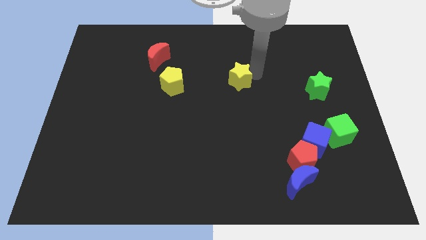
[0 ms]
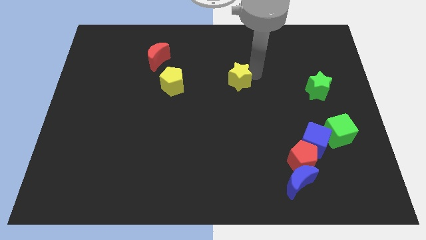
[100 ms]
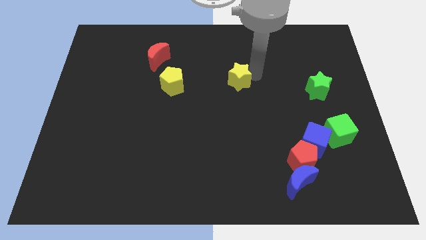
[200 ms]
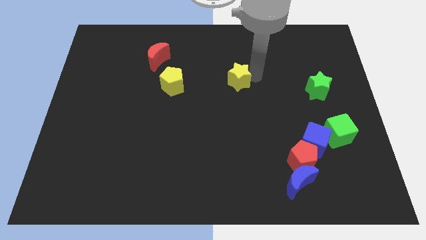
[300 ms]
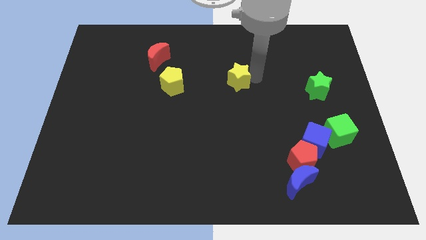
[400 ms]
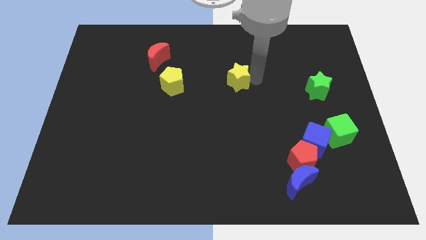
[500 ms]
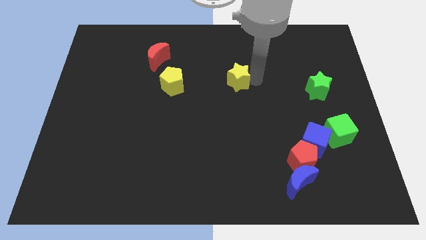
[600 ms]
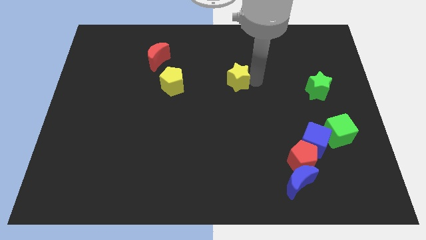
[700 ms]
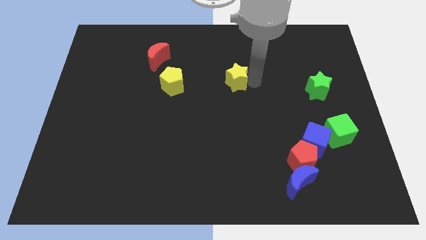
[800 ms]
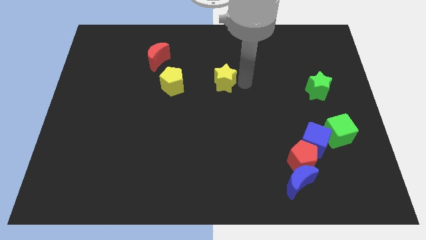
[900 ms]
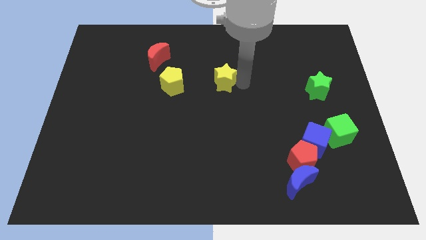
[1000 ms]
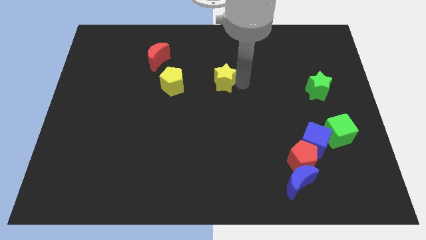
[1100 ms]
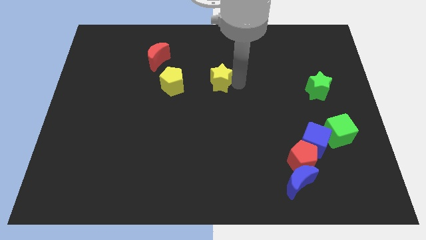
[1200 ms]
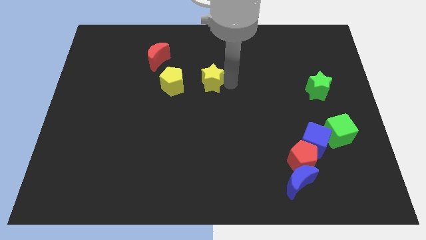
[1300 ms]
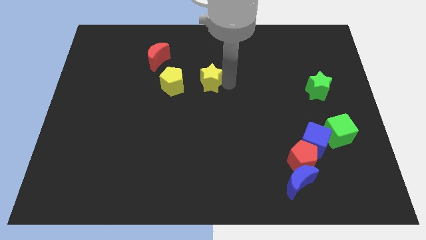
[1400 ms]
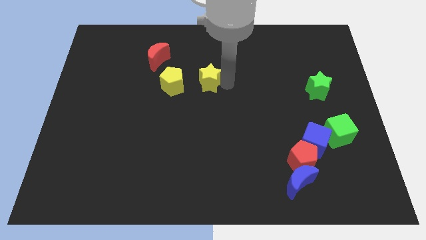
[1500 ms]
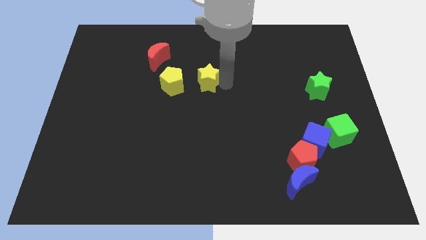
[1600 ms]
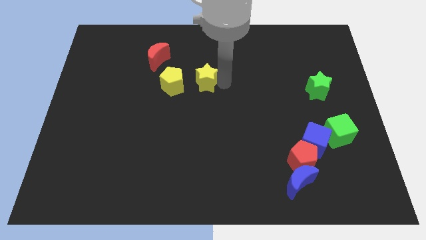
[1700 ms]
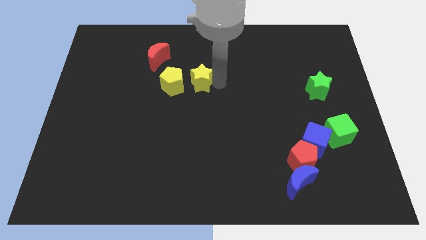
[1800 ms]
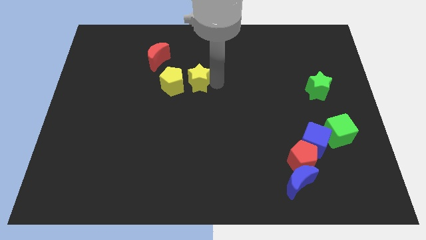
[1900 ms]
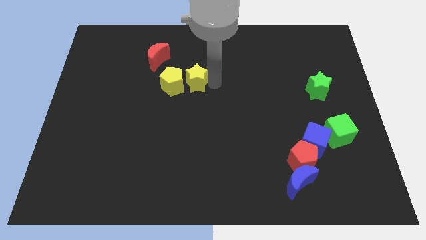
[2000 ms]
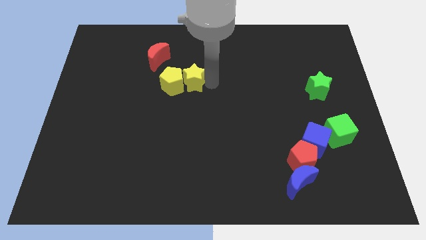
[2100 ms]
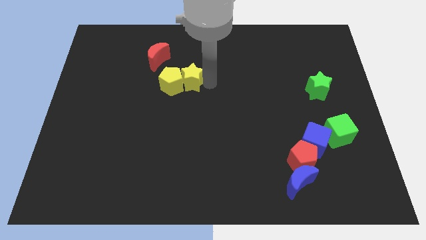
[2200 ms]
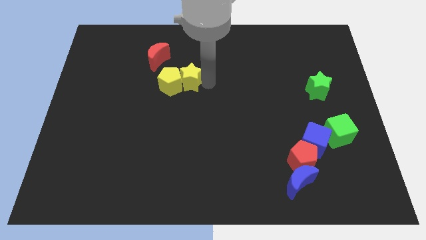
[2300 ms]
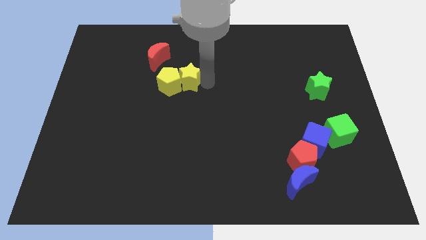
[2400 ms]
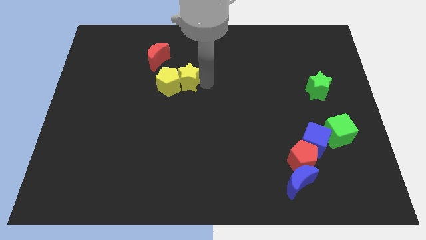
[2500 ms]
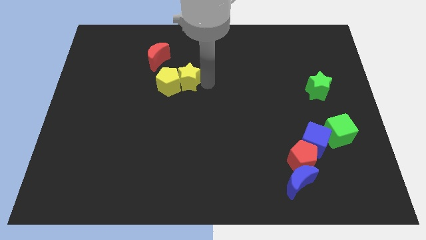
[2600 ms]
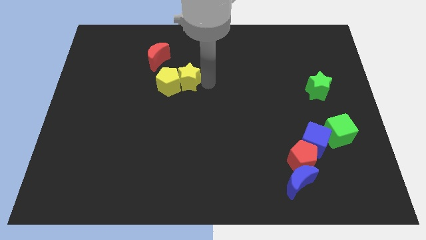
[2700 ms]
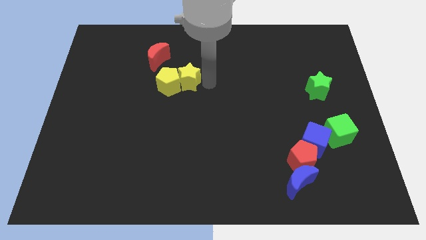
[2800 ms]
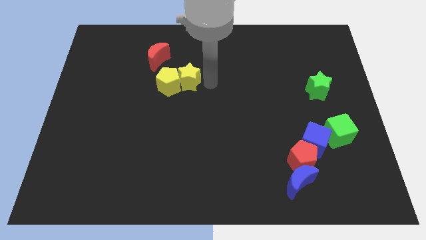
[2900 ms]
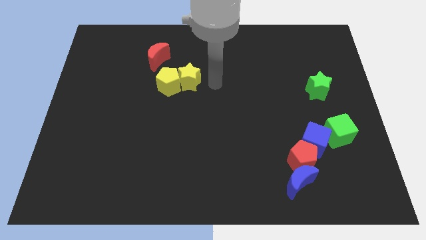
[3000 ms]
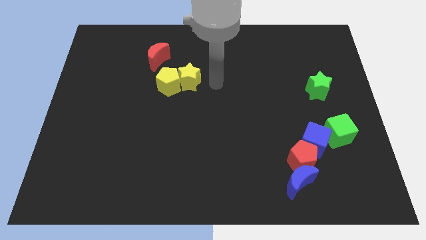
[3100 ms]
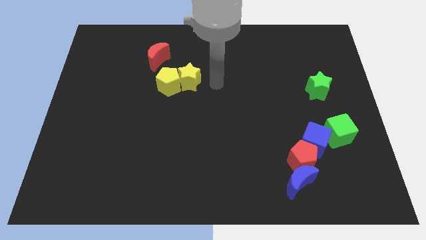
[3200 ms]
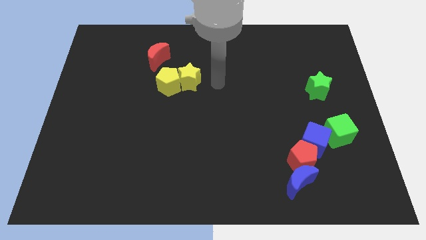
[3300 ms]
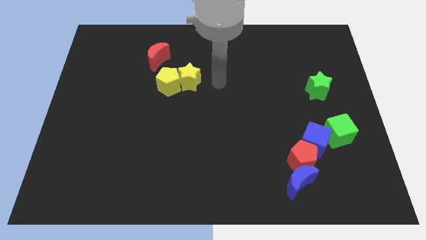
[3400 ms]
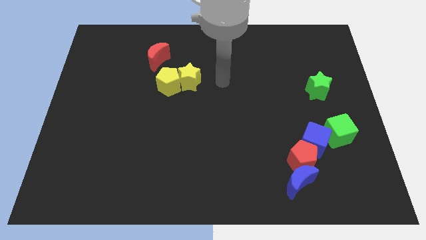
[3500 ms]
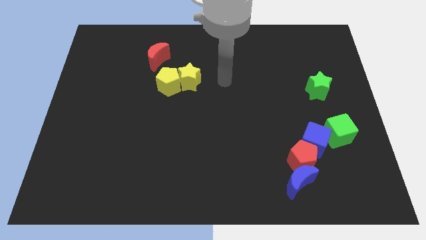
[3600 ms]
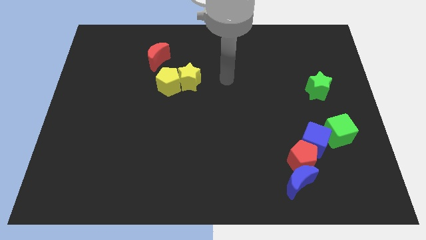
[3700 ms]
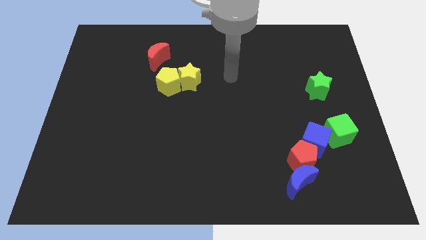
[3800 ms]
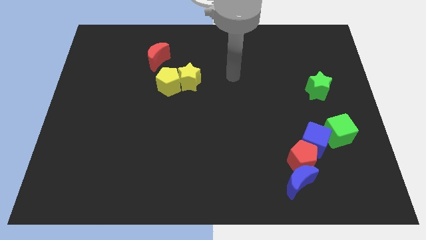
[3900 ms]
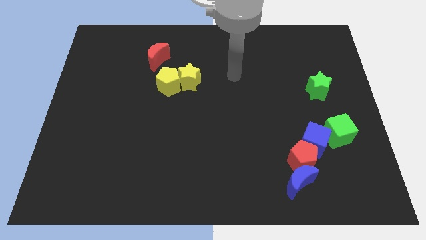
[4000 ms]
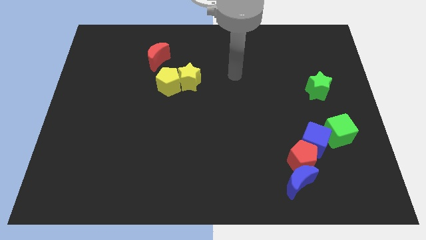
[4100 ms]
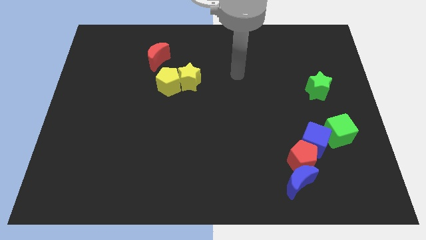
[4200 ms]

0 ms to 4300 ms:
push the yellow star into the yellow pentagon

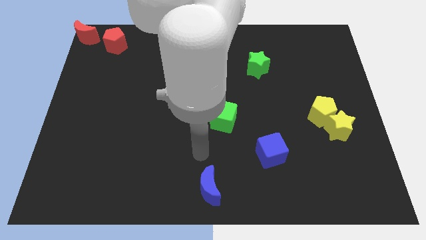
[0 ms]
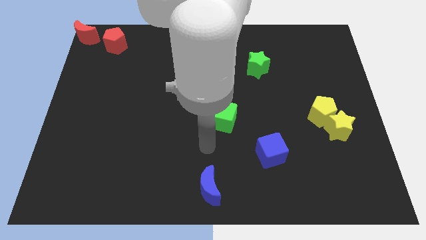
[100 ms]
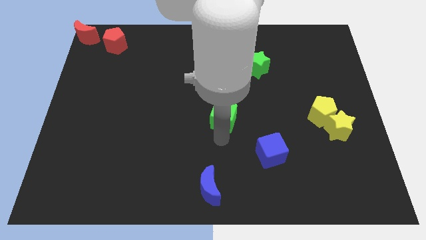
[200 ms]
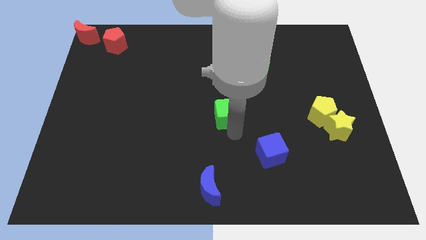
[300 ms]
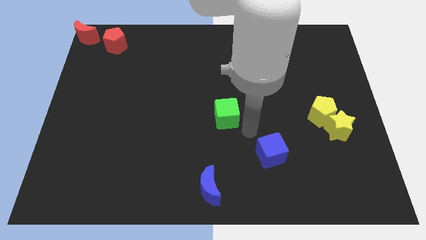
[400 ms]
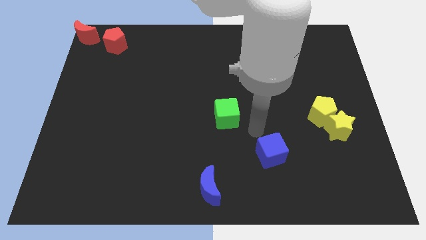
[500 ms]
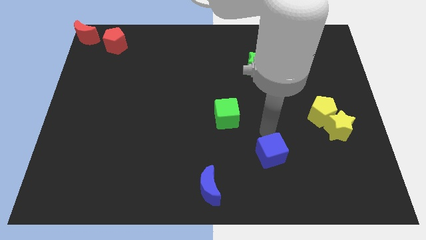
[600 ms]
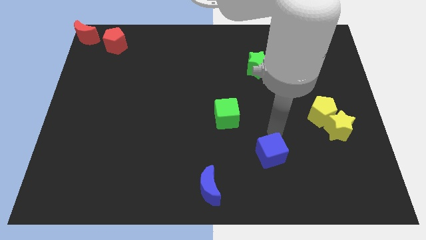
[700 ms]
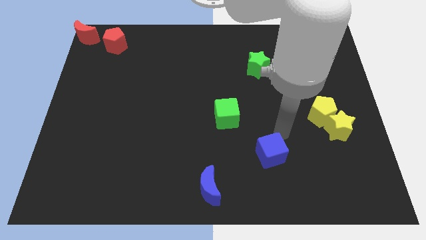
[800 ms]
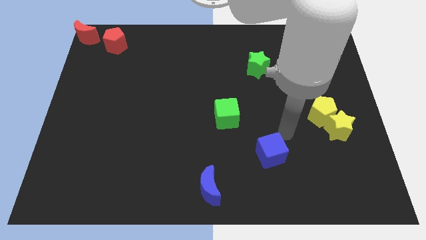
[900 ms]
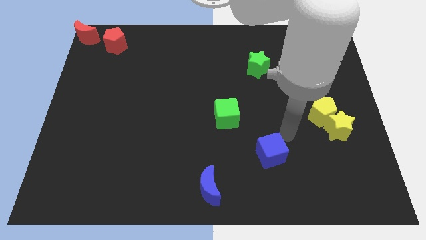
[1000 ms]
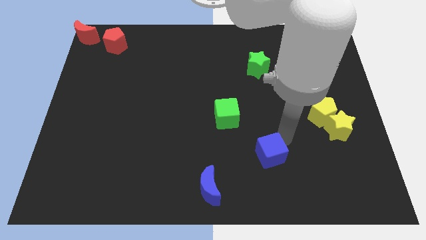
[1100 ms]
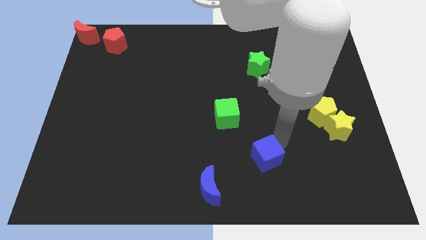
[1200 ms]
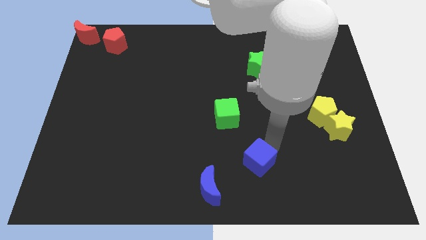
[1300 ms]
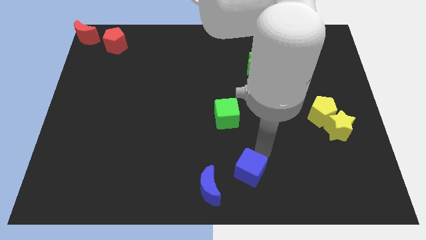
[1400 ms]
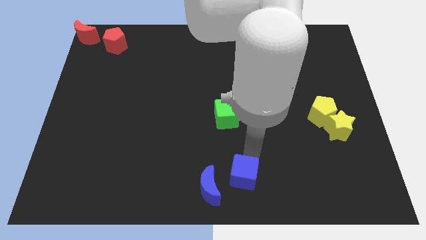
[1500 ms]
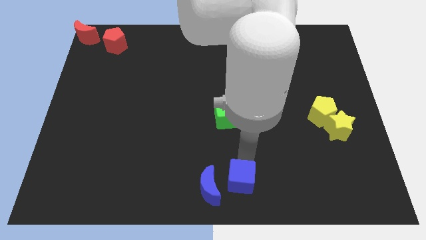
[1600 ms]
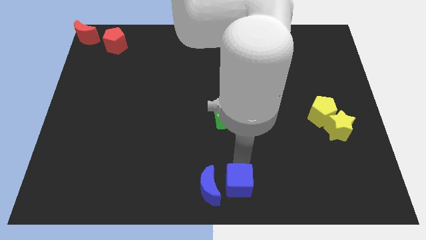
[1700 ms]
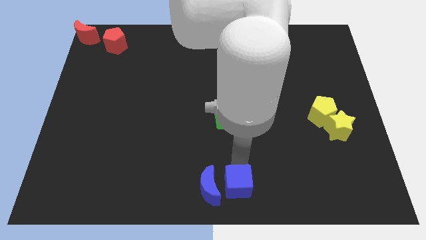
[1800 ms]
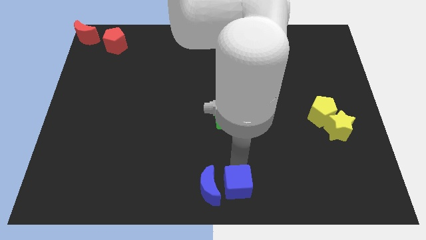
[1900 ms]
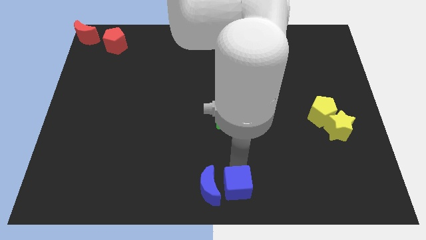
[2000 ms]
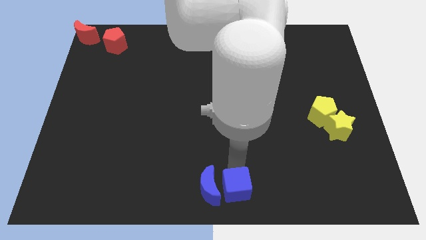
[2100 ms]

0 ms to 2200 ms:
move blue cube to the right side of the blue semi circle

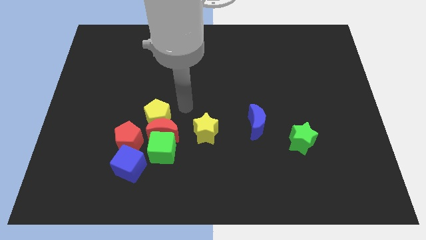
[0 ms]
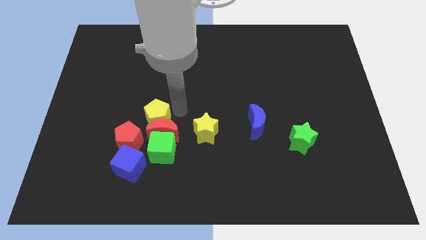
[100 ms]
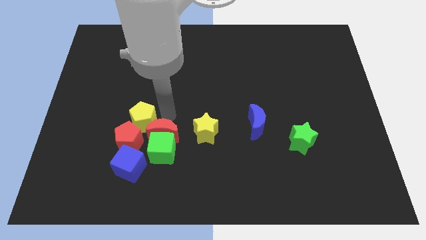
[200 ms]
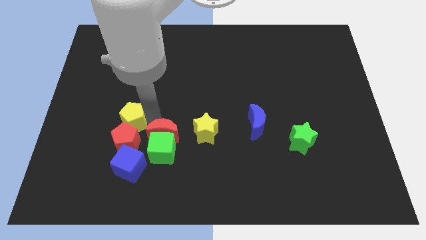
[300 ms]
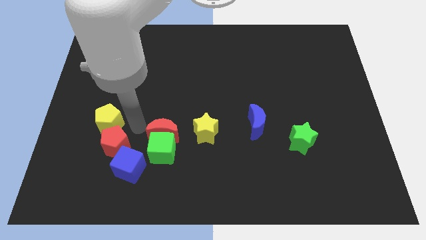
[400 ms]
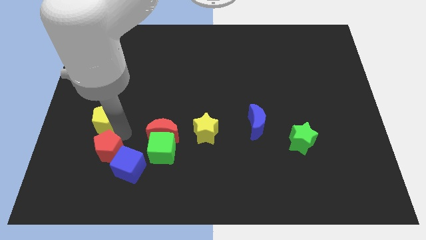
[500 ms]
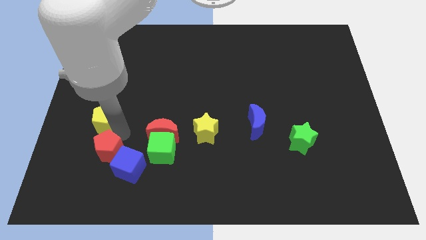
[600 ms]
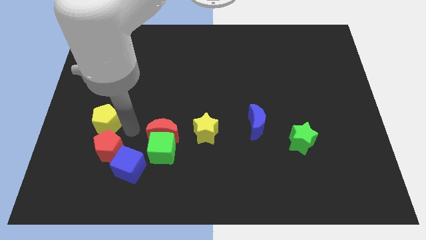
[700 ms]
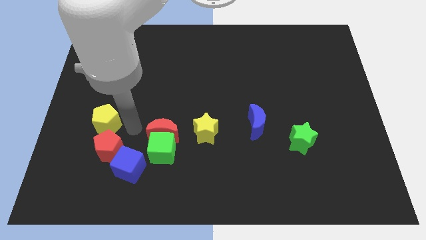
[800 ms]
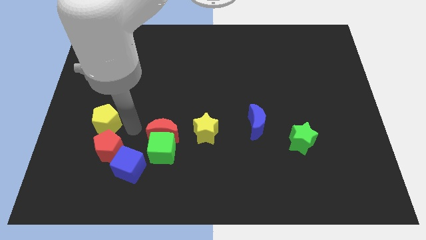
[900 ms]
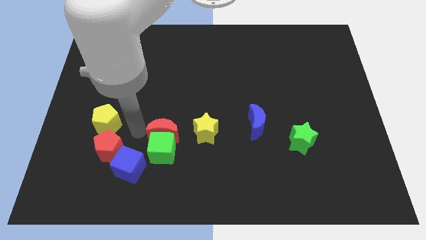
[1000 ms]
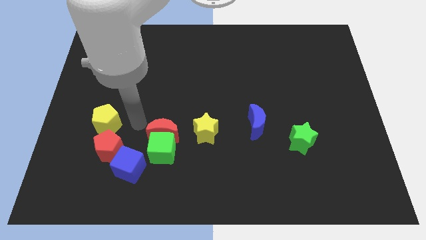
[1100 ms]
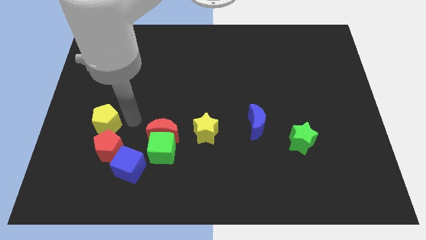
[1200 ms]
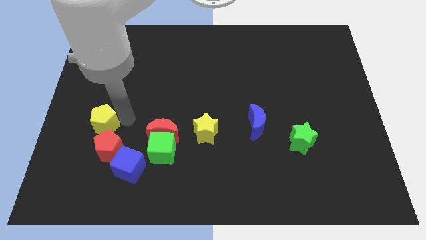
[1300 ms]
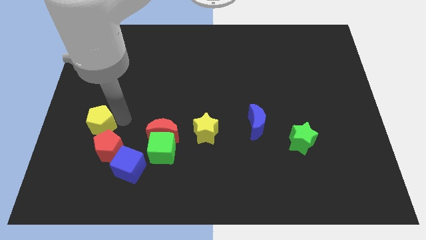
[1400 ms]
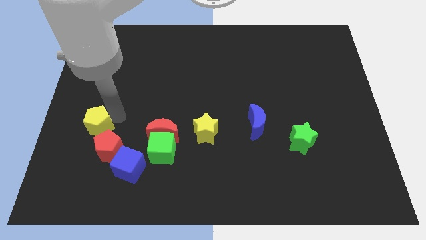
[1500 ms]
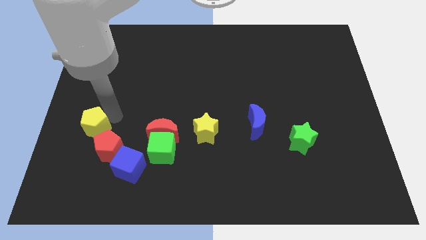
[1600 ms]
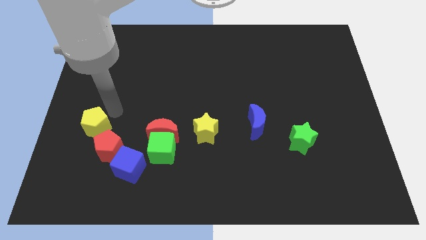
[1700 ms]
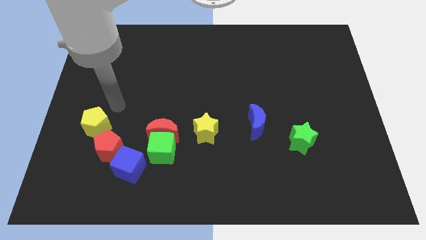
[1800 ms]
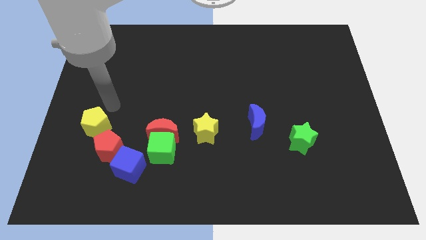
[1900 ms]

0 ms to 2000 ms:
move the yellow pentagon in a vertical line

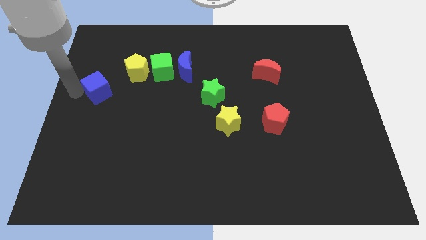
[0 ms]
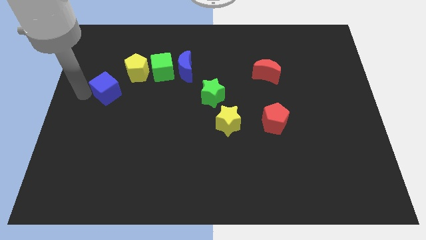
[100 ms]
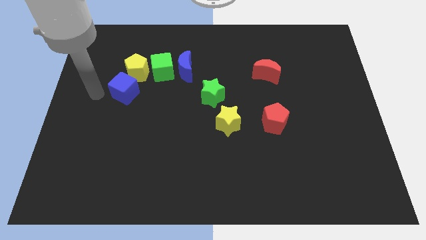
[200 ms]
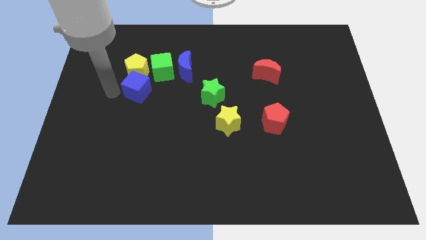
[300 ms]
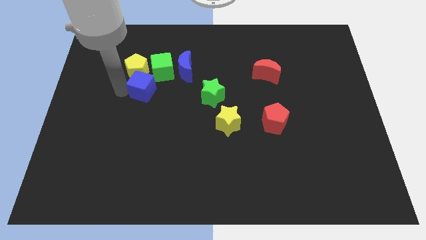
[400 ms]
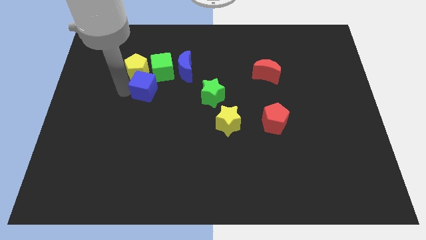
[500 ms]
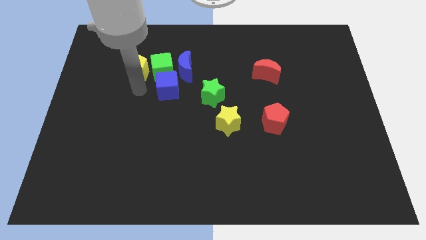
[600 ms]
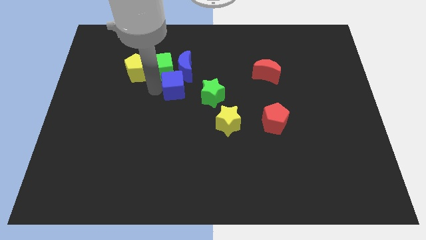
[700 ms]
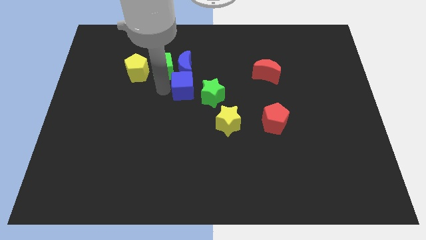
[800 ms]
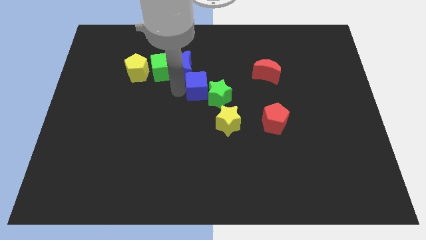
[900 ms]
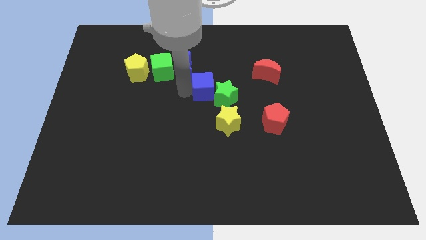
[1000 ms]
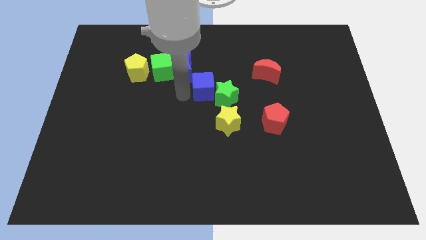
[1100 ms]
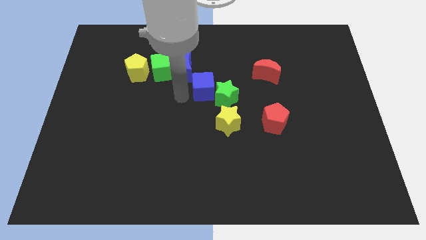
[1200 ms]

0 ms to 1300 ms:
push the blue cube towards the green star
